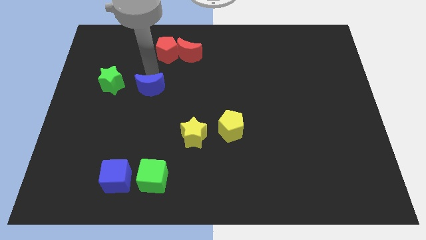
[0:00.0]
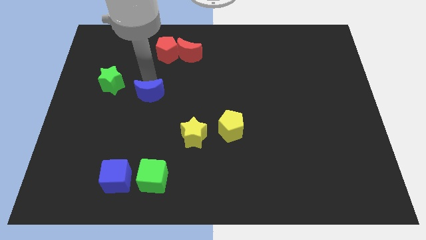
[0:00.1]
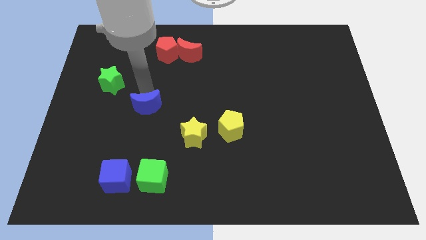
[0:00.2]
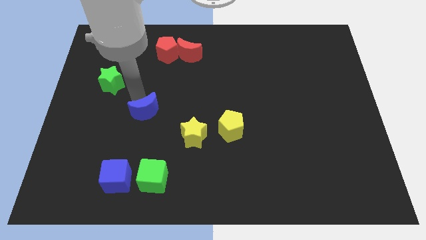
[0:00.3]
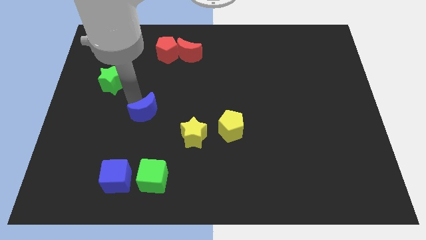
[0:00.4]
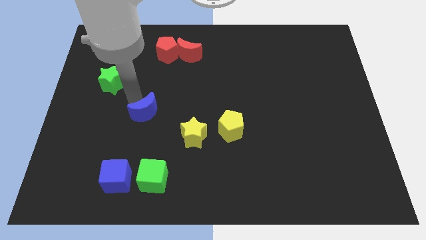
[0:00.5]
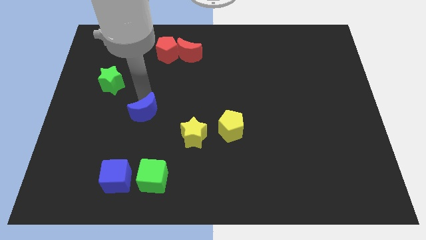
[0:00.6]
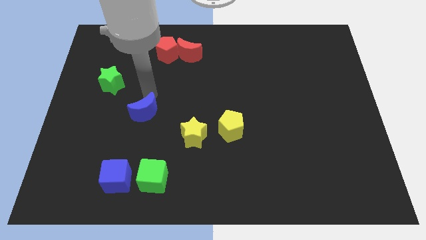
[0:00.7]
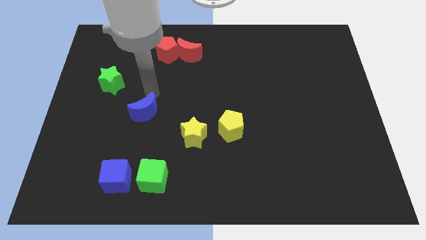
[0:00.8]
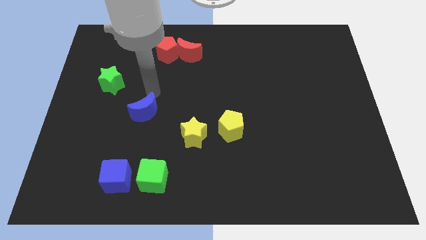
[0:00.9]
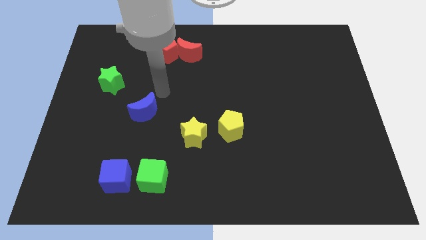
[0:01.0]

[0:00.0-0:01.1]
separate the blue moon from the green star

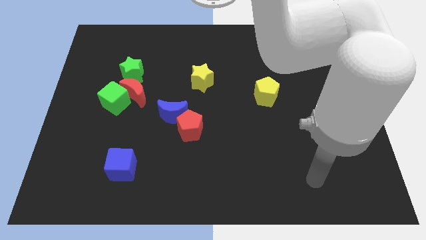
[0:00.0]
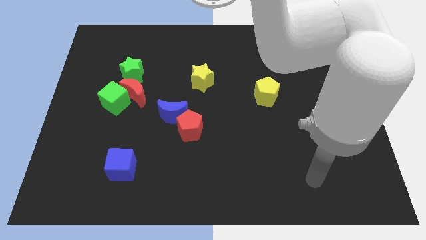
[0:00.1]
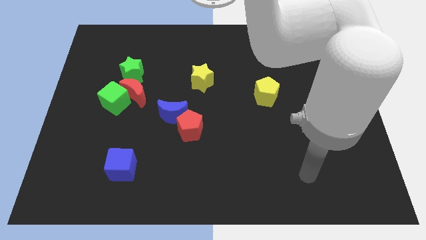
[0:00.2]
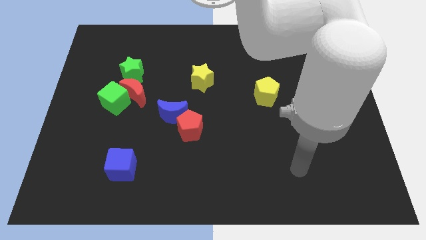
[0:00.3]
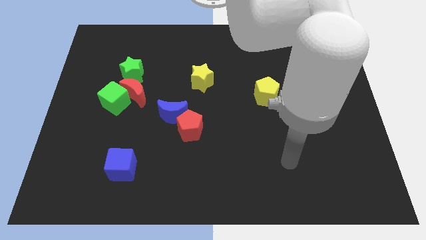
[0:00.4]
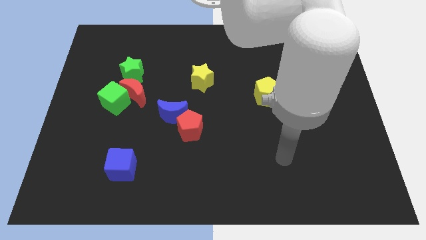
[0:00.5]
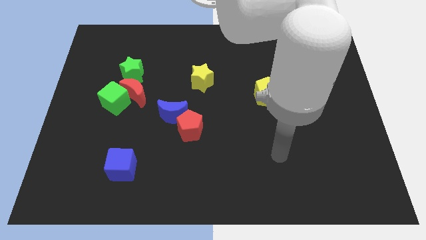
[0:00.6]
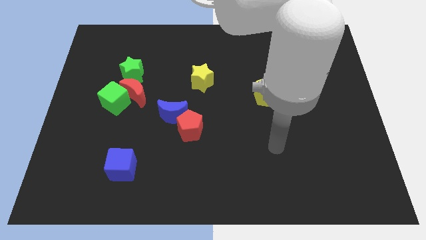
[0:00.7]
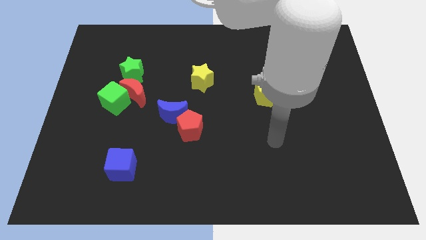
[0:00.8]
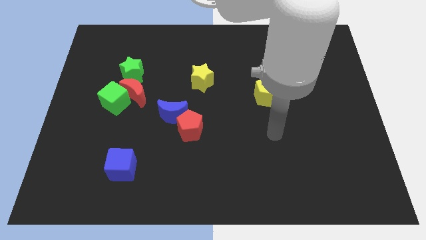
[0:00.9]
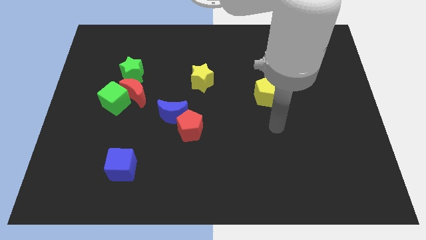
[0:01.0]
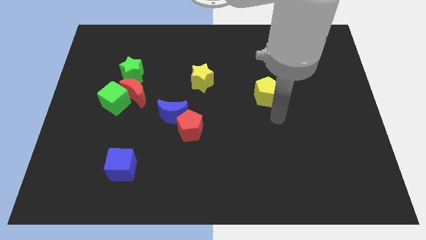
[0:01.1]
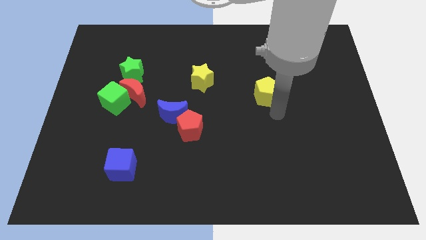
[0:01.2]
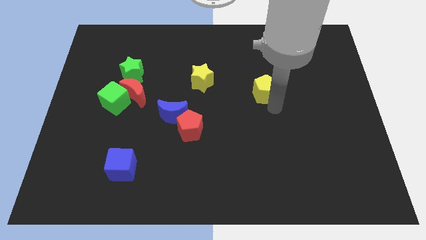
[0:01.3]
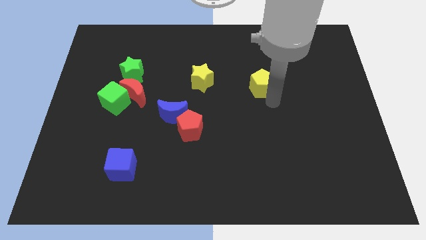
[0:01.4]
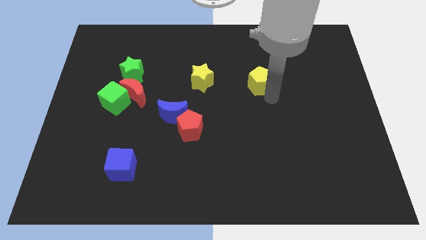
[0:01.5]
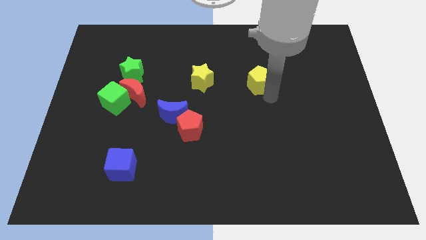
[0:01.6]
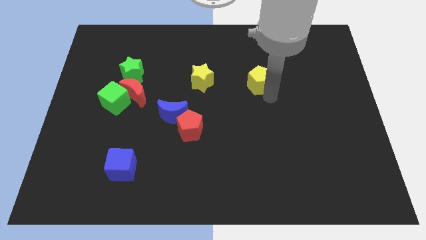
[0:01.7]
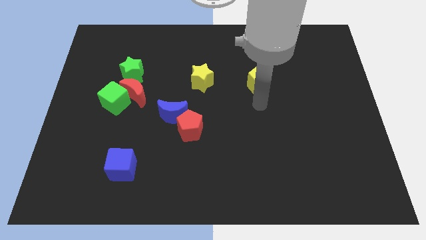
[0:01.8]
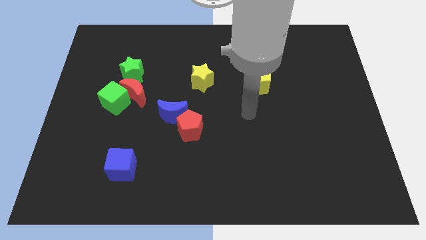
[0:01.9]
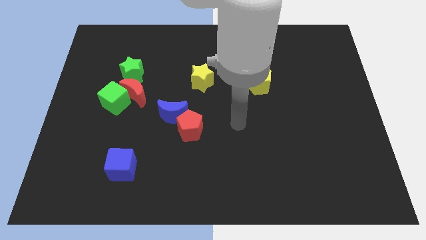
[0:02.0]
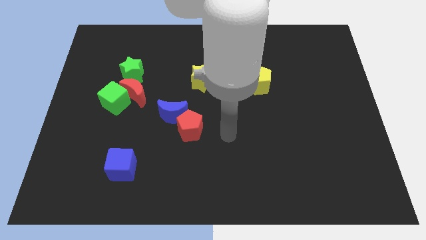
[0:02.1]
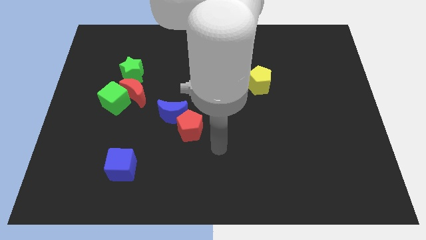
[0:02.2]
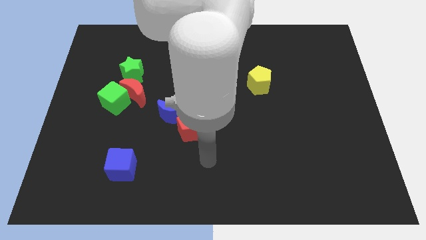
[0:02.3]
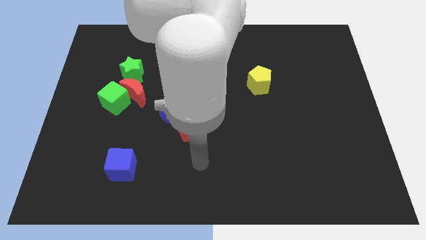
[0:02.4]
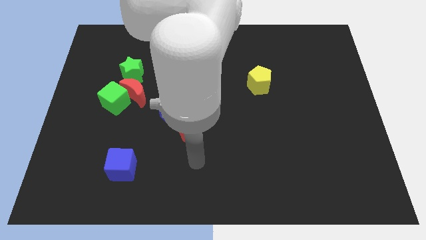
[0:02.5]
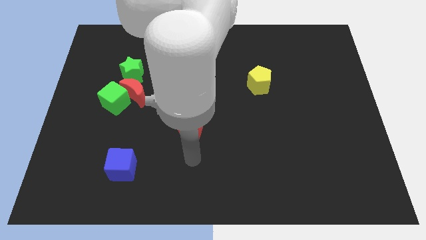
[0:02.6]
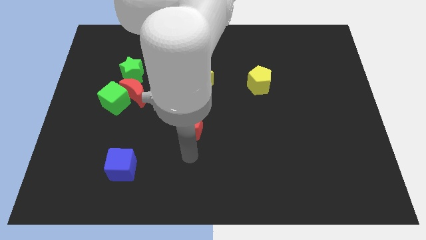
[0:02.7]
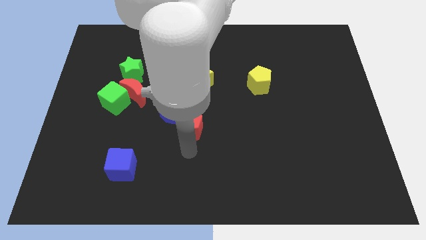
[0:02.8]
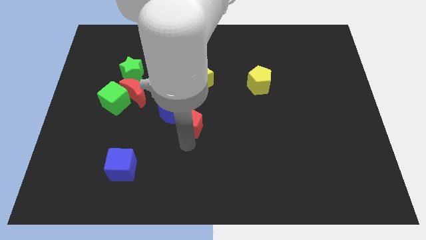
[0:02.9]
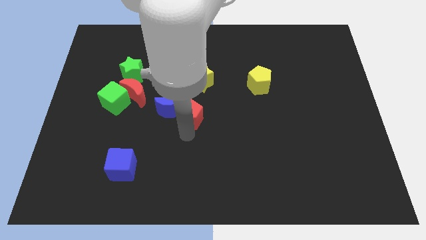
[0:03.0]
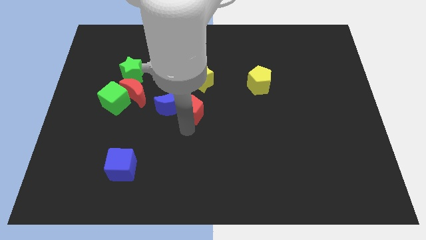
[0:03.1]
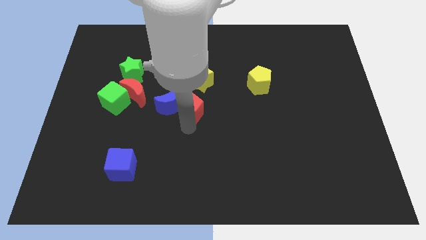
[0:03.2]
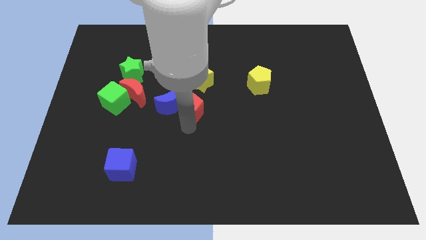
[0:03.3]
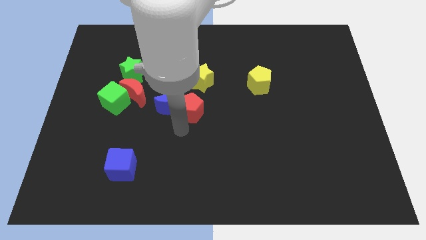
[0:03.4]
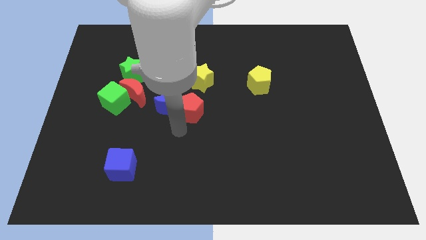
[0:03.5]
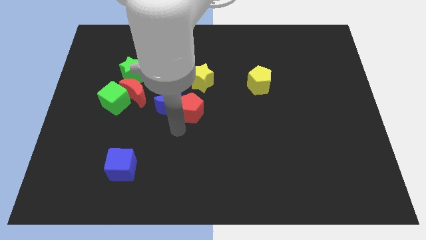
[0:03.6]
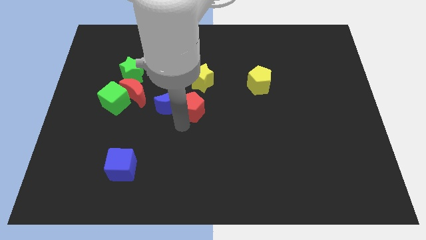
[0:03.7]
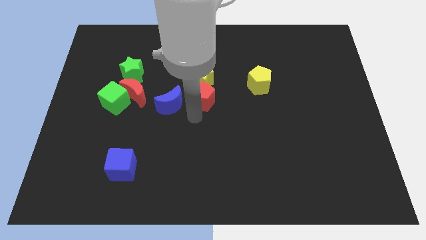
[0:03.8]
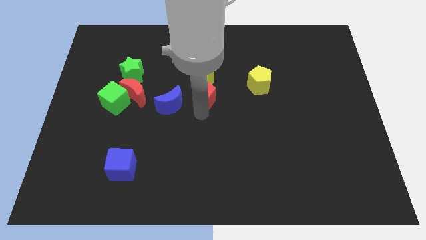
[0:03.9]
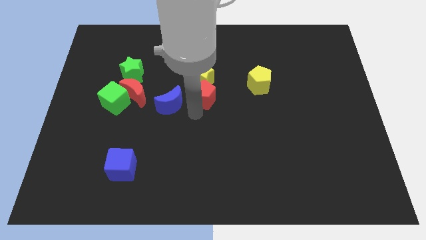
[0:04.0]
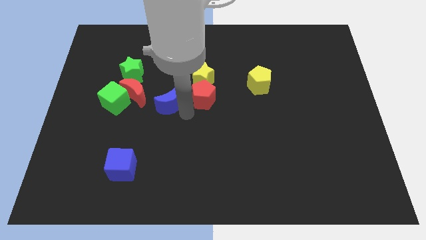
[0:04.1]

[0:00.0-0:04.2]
move pentagons to the top of the board

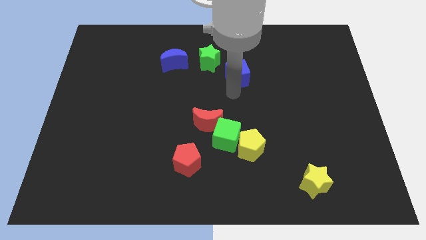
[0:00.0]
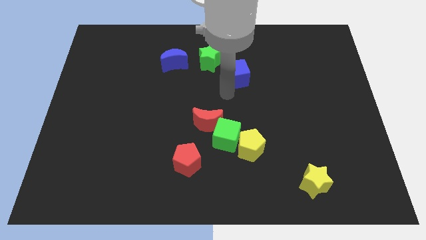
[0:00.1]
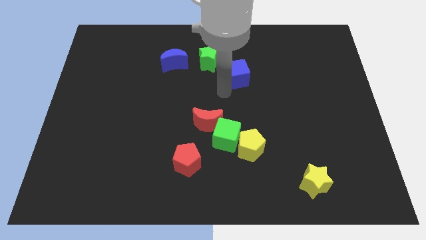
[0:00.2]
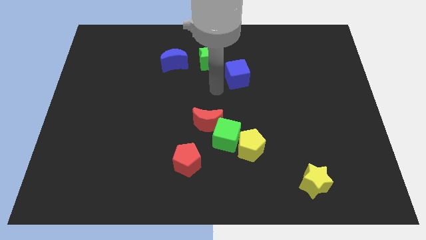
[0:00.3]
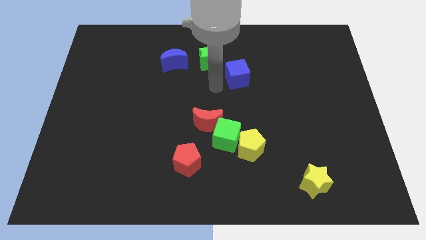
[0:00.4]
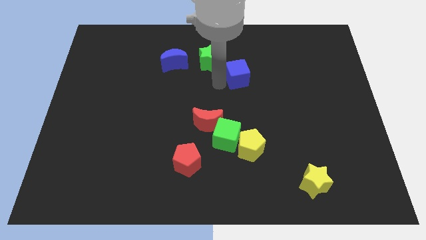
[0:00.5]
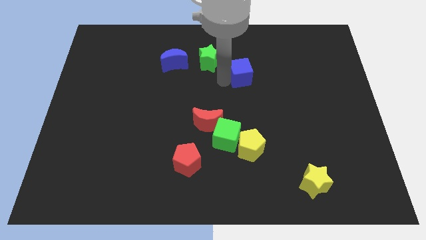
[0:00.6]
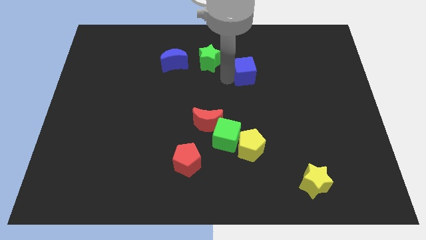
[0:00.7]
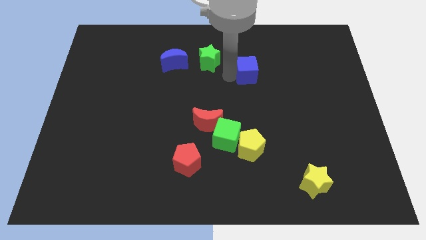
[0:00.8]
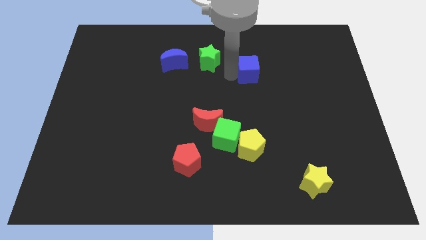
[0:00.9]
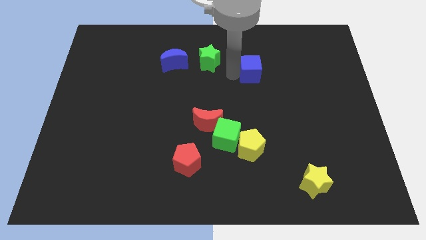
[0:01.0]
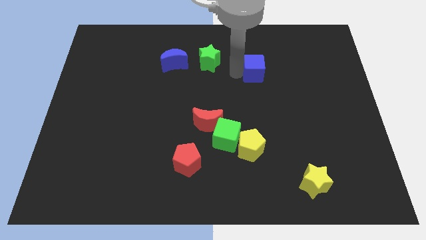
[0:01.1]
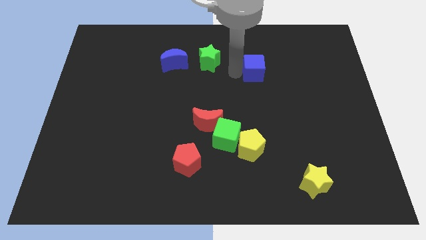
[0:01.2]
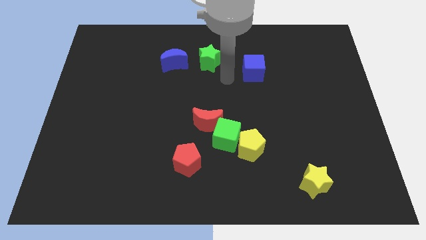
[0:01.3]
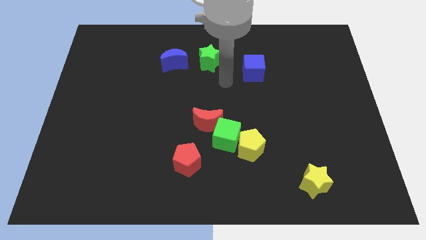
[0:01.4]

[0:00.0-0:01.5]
slightly move the green cube right

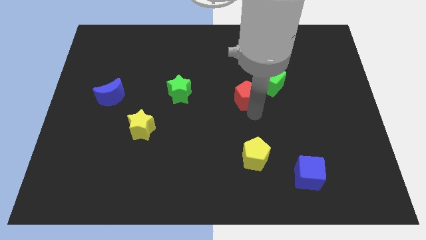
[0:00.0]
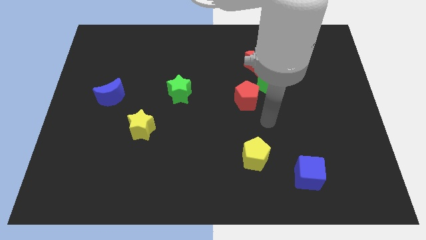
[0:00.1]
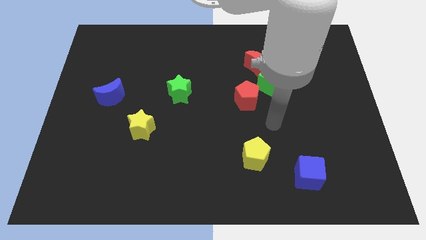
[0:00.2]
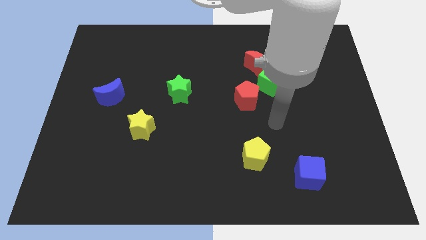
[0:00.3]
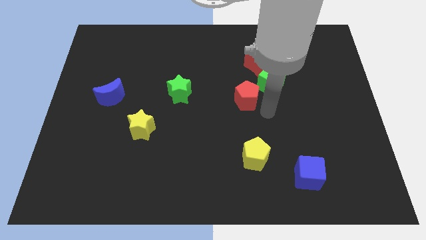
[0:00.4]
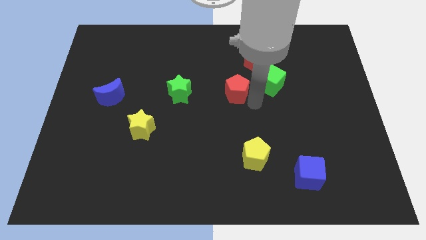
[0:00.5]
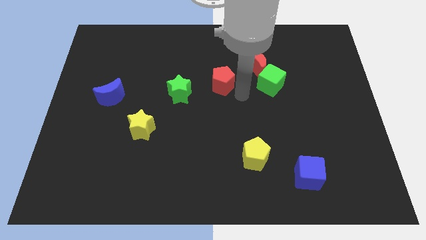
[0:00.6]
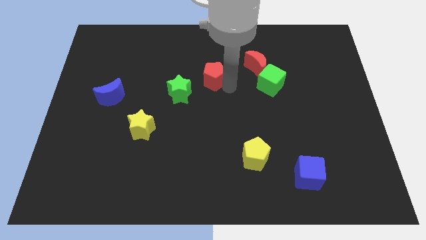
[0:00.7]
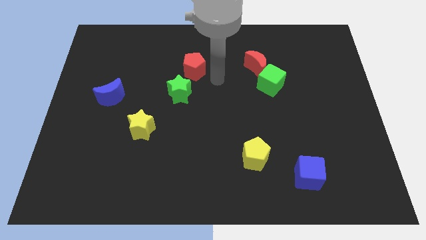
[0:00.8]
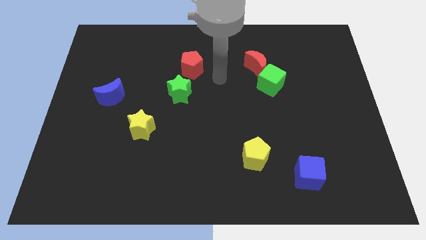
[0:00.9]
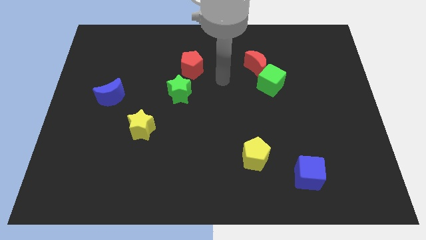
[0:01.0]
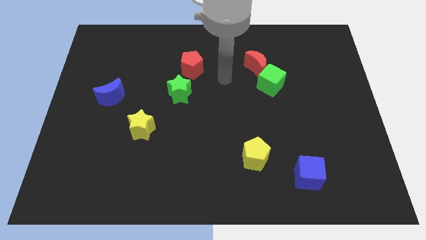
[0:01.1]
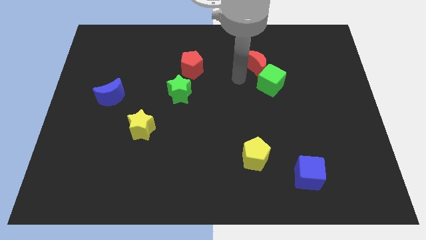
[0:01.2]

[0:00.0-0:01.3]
push red pentagon diagonally towards the green star

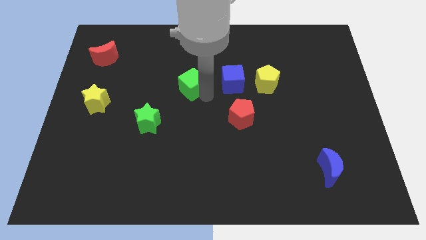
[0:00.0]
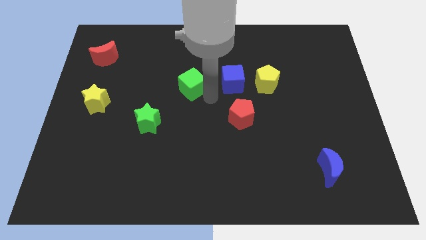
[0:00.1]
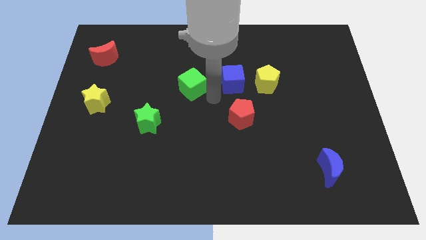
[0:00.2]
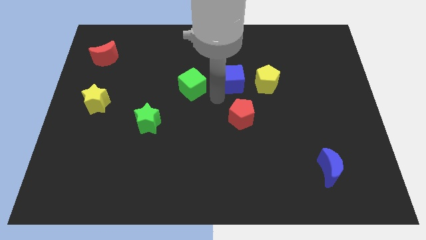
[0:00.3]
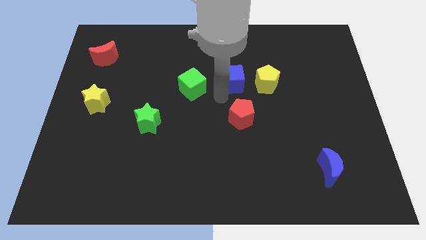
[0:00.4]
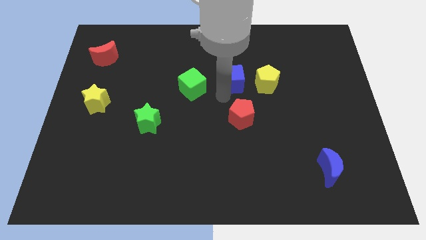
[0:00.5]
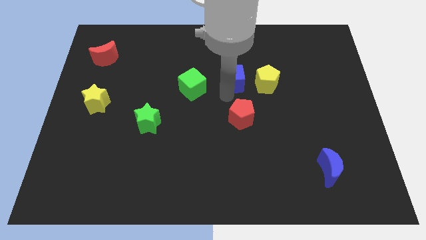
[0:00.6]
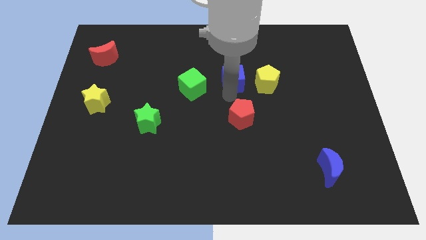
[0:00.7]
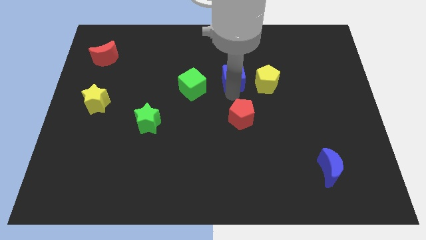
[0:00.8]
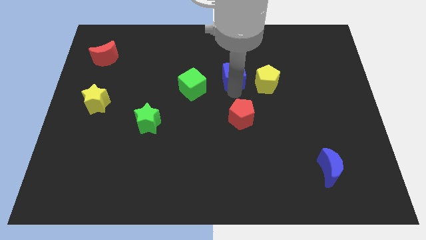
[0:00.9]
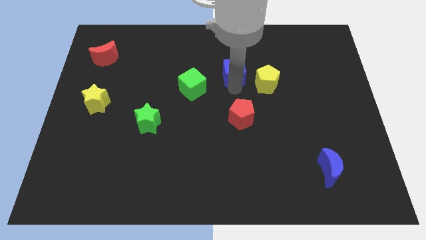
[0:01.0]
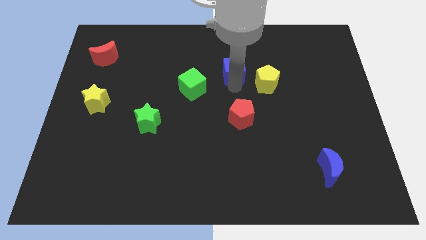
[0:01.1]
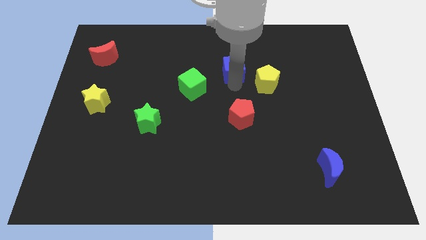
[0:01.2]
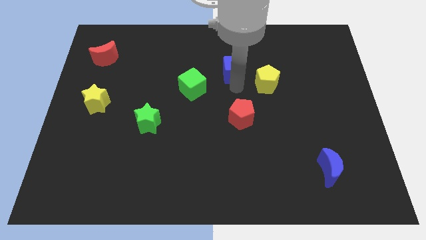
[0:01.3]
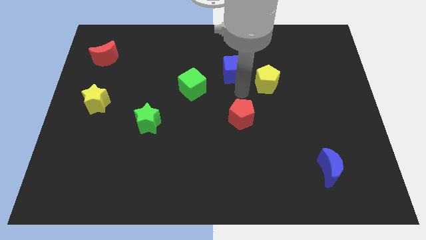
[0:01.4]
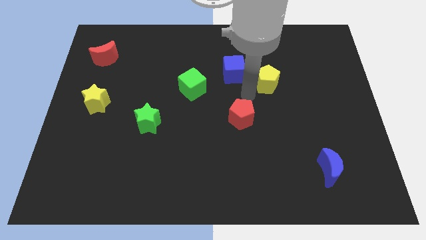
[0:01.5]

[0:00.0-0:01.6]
slightly push the blue cube towards the top center of the board
